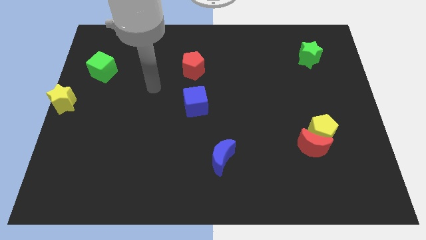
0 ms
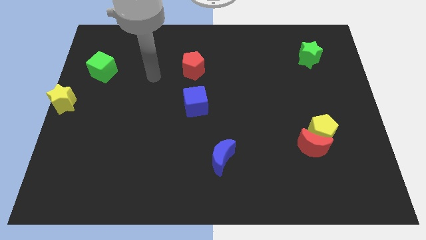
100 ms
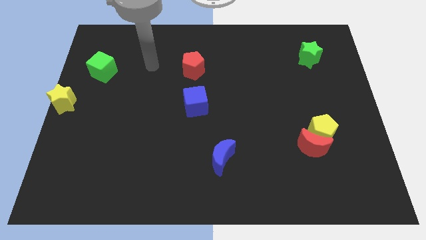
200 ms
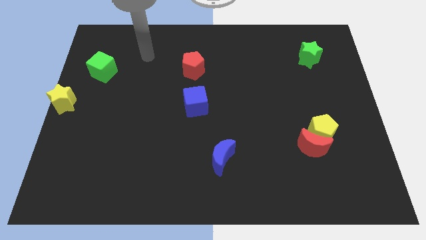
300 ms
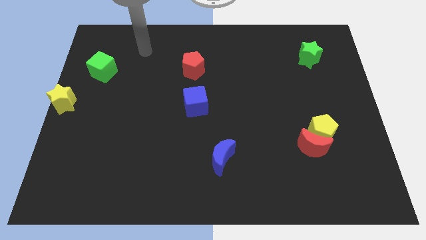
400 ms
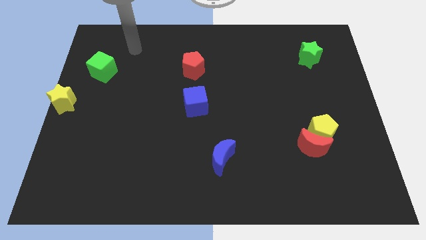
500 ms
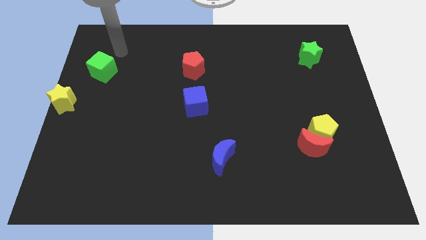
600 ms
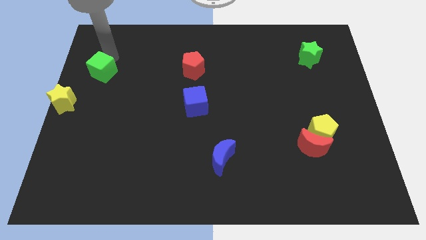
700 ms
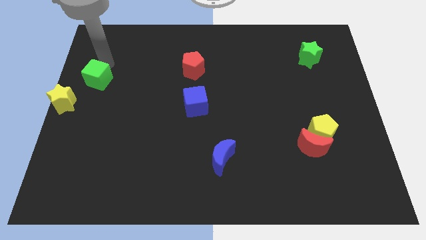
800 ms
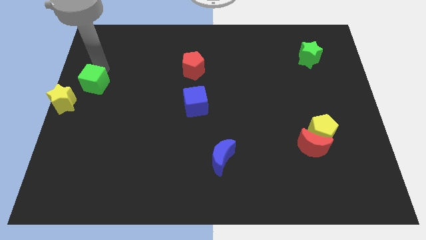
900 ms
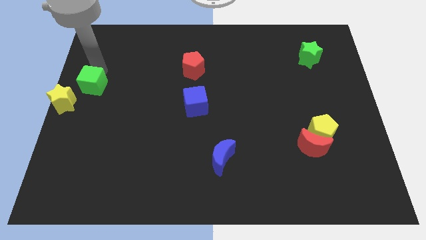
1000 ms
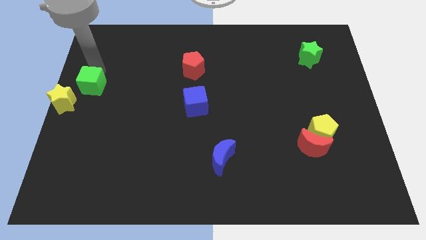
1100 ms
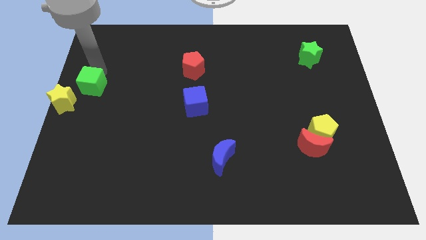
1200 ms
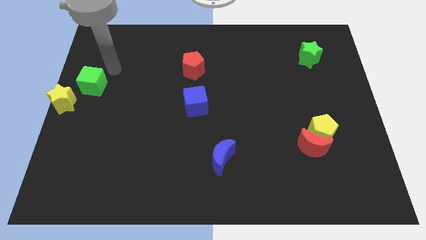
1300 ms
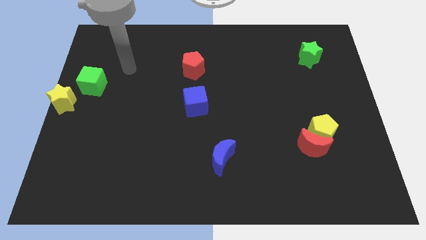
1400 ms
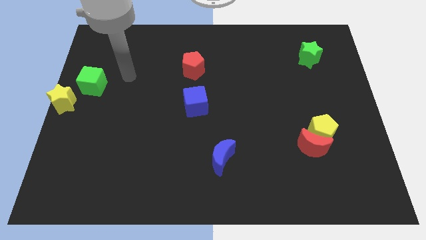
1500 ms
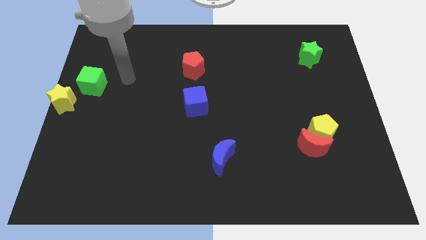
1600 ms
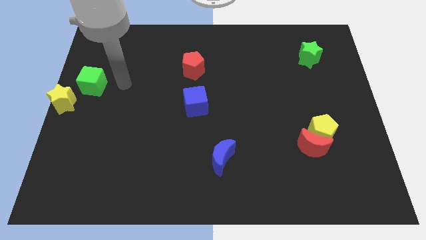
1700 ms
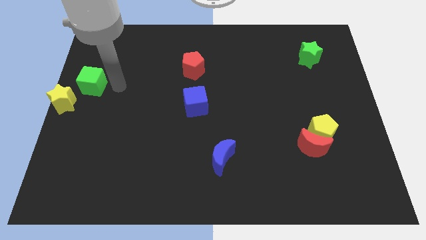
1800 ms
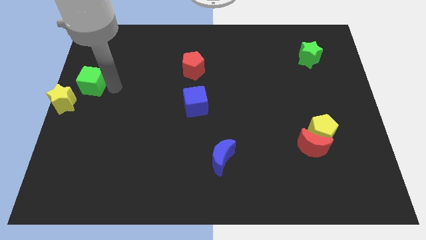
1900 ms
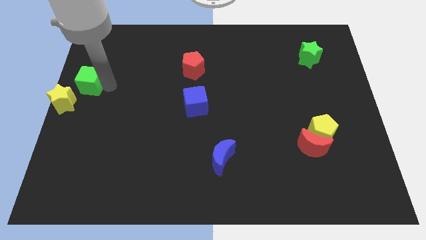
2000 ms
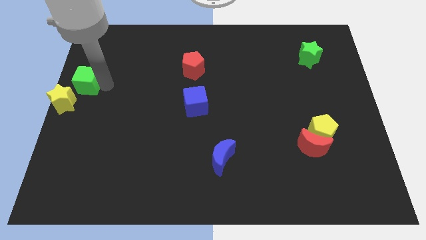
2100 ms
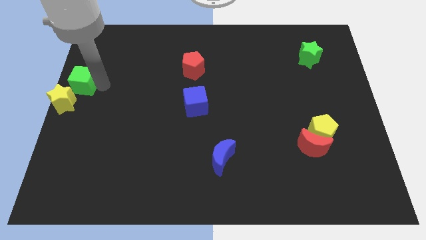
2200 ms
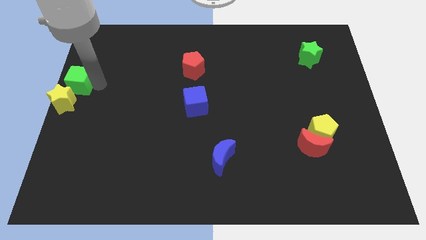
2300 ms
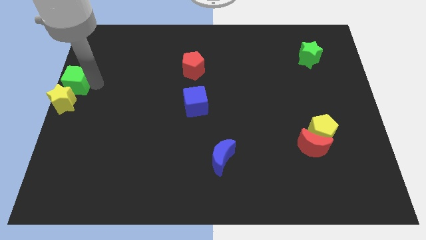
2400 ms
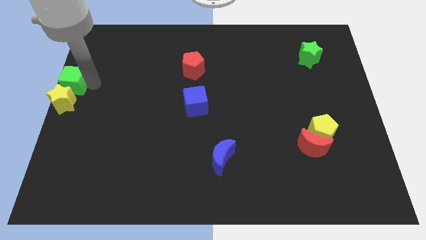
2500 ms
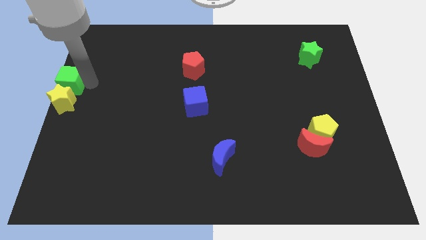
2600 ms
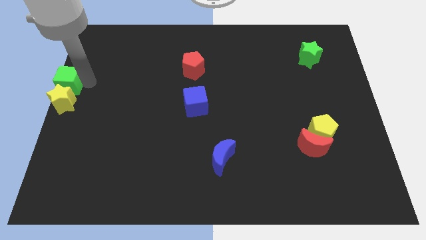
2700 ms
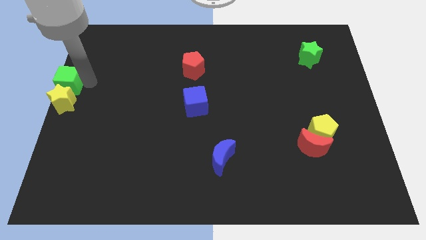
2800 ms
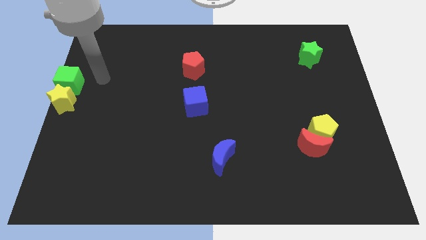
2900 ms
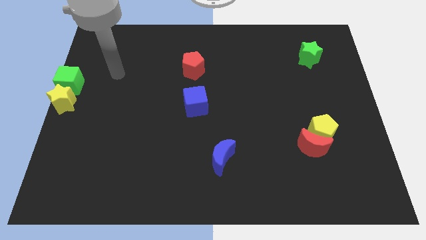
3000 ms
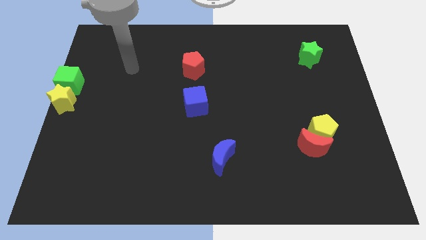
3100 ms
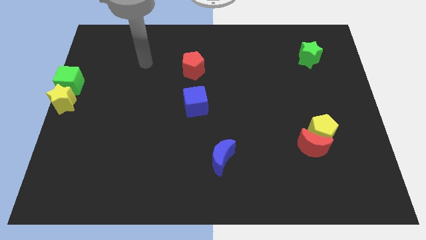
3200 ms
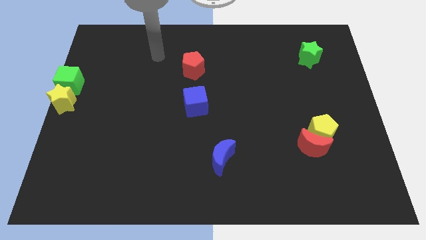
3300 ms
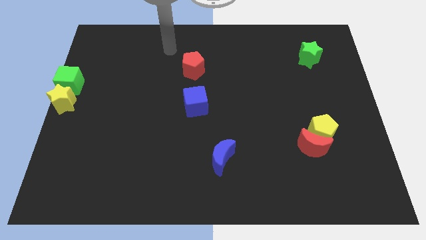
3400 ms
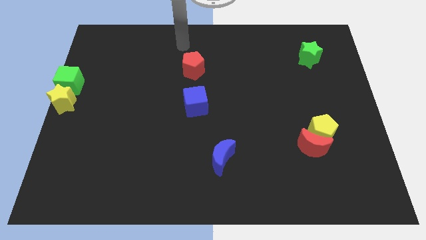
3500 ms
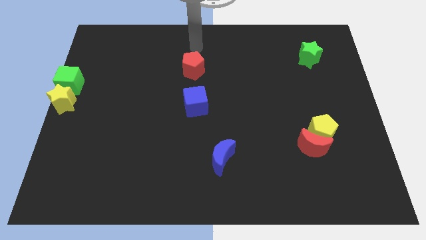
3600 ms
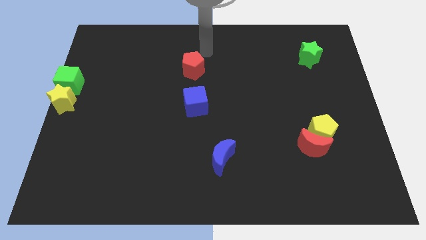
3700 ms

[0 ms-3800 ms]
place the green cube on top of the yellow star

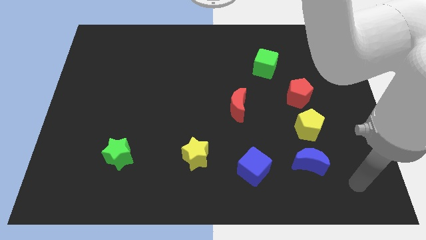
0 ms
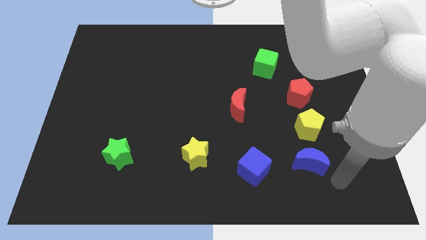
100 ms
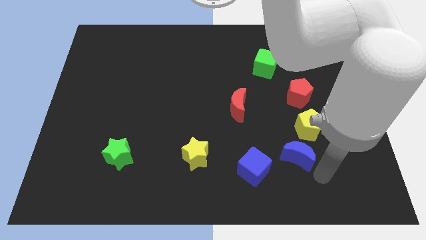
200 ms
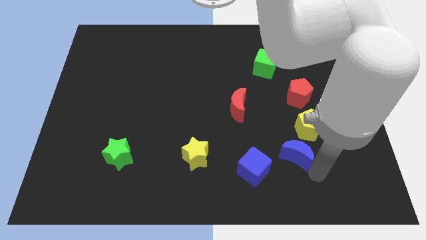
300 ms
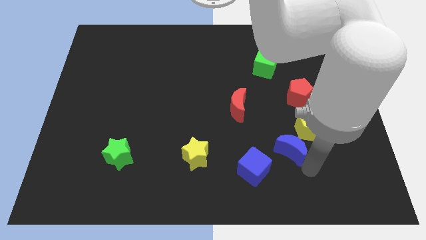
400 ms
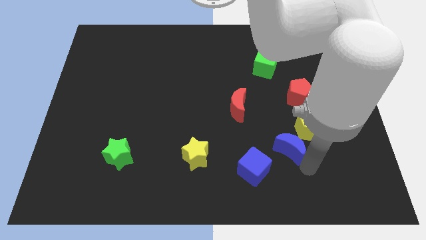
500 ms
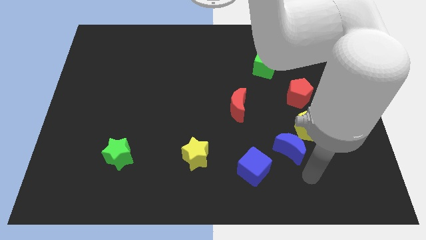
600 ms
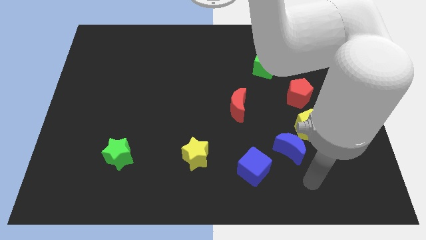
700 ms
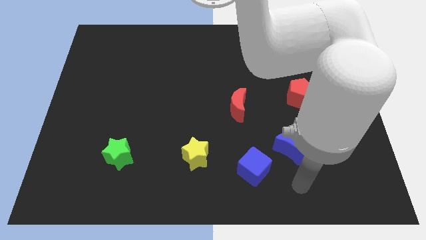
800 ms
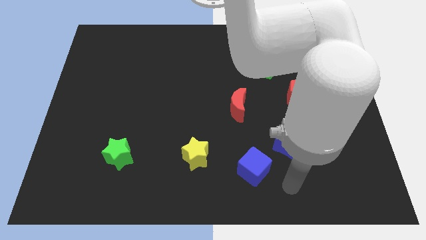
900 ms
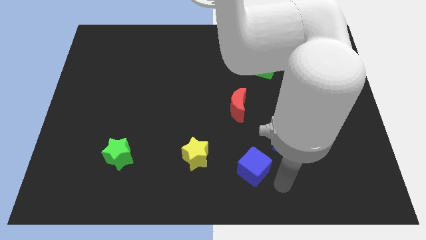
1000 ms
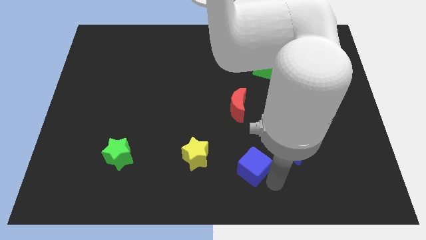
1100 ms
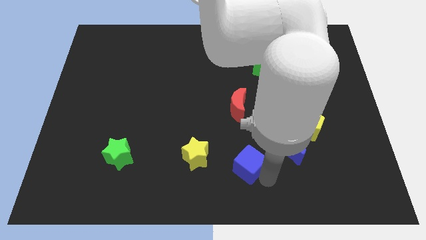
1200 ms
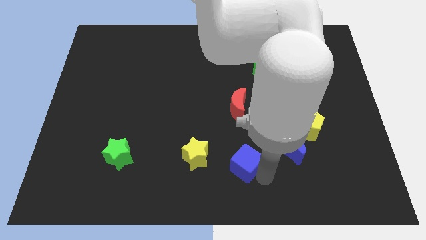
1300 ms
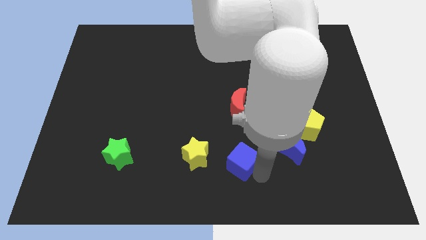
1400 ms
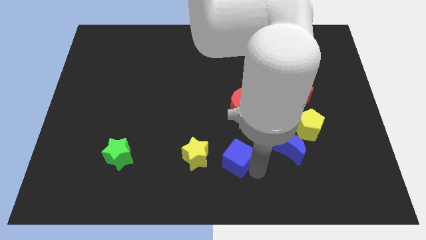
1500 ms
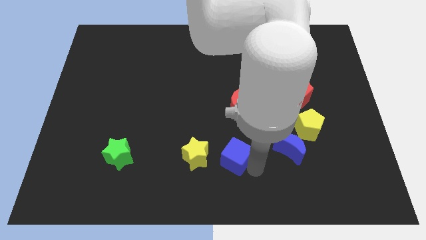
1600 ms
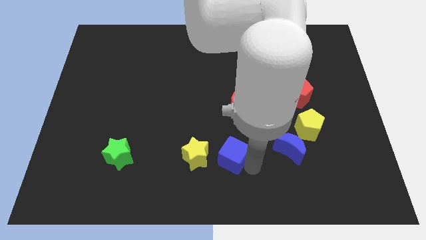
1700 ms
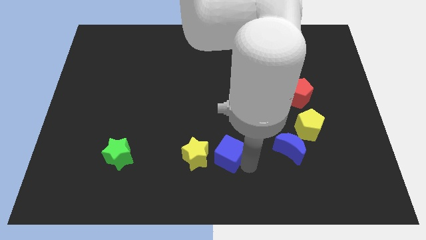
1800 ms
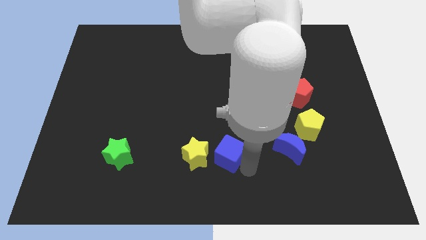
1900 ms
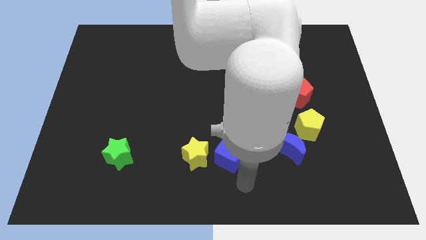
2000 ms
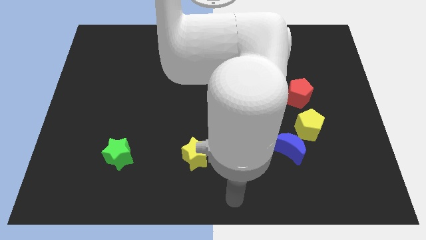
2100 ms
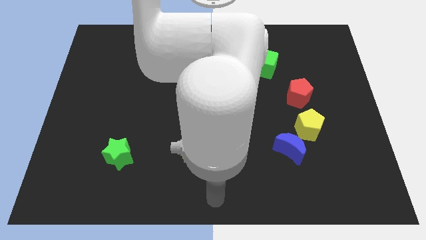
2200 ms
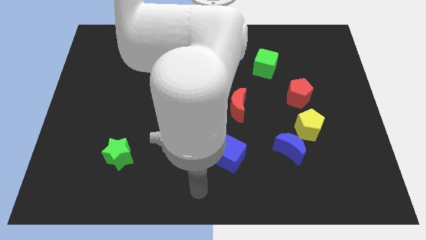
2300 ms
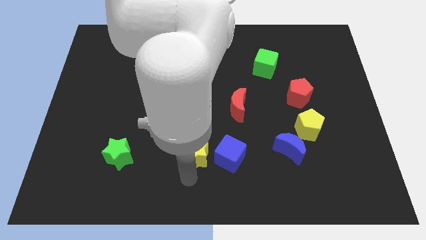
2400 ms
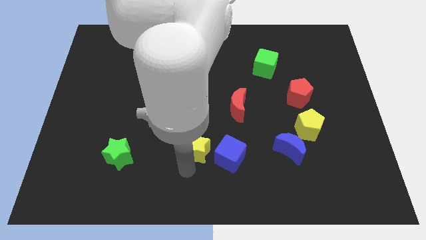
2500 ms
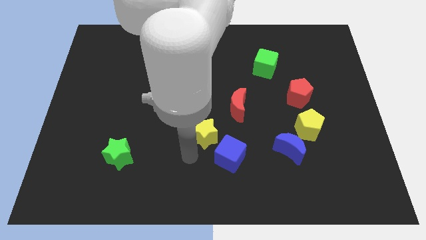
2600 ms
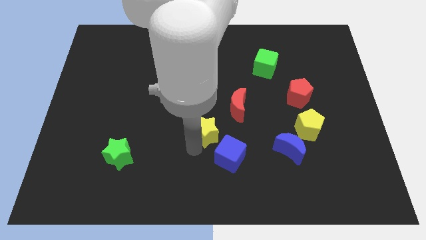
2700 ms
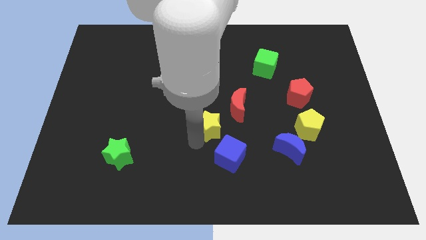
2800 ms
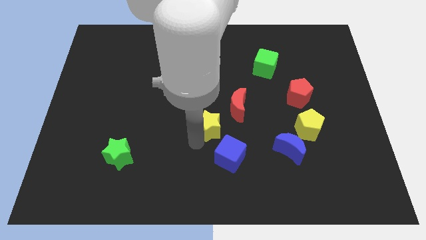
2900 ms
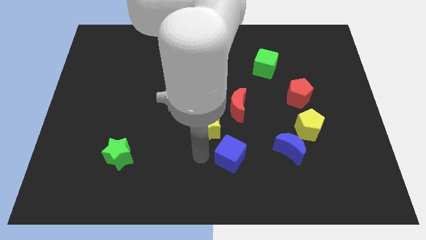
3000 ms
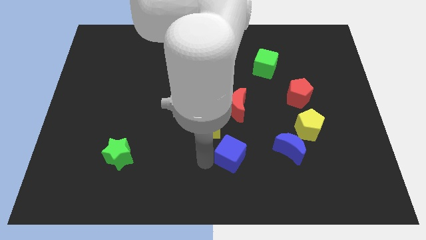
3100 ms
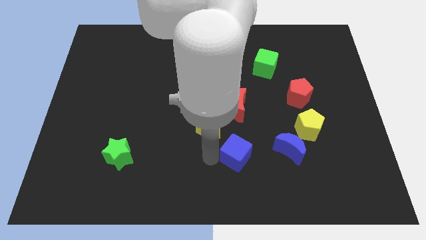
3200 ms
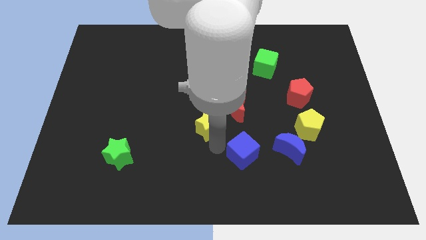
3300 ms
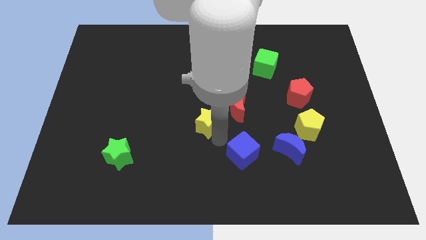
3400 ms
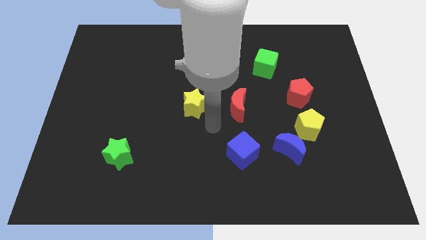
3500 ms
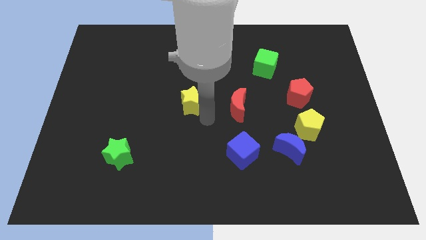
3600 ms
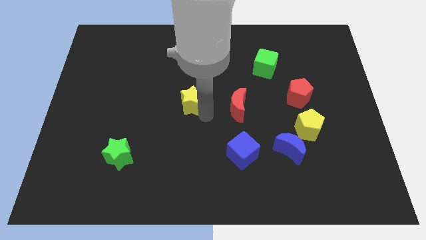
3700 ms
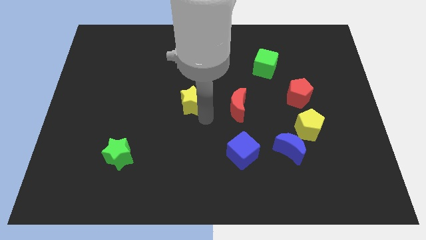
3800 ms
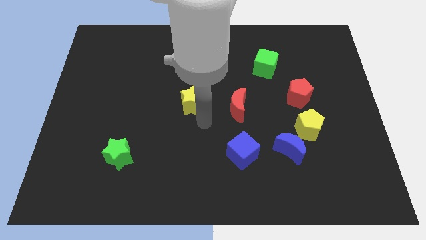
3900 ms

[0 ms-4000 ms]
move the yellow star to the center of the board

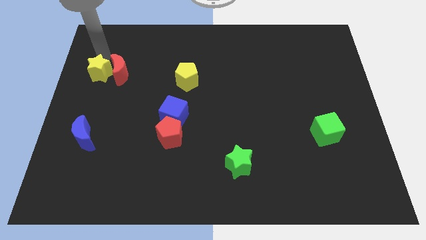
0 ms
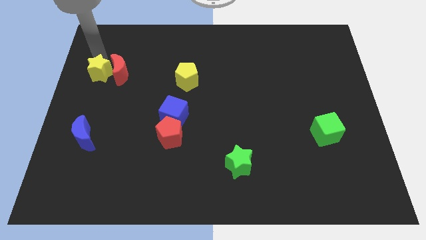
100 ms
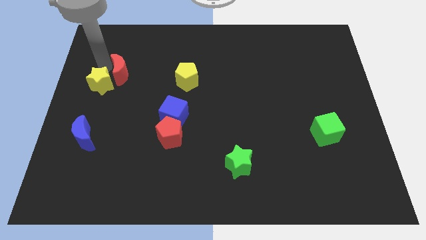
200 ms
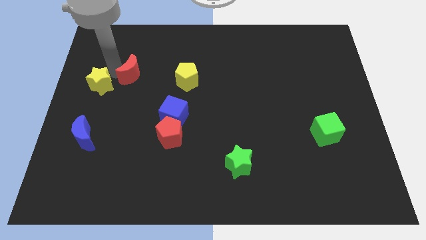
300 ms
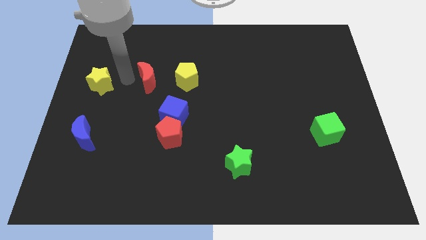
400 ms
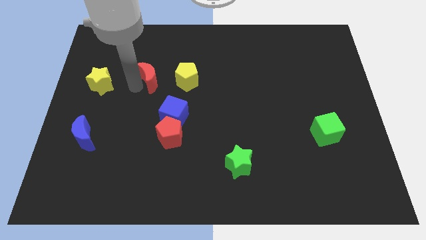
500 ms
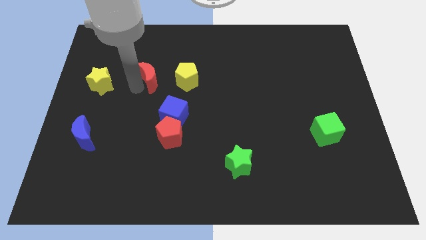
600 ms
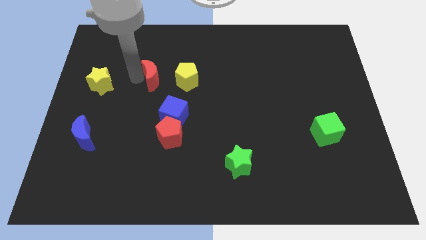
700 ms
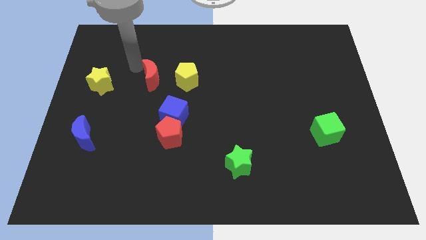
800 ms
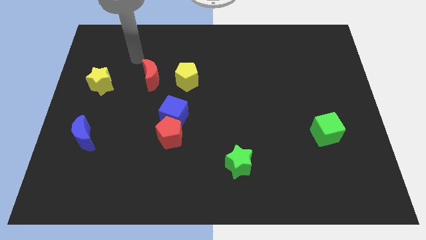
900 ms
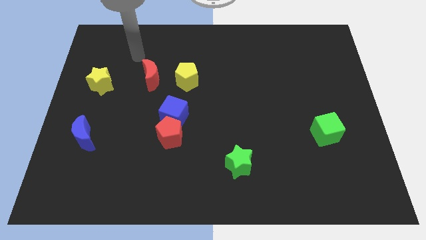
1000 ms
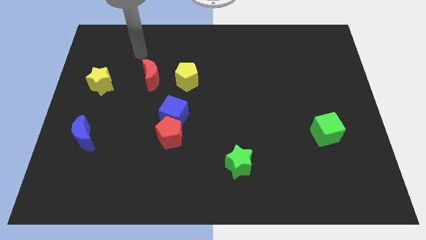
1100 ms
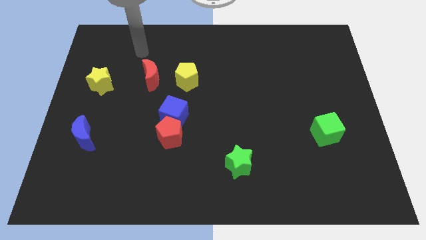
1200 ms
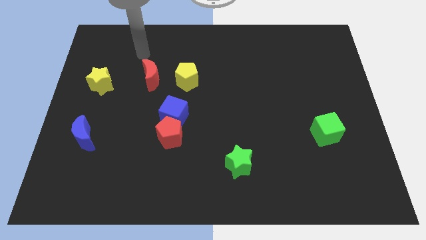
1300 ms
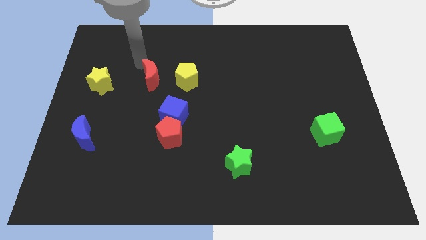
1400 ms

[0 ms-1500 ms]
separate the red crescent from the yellow star
